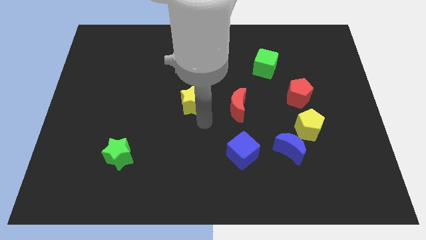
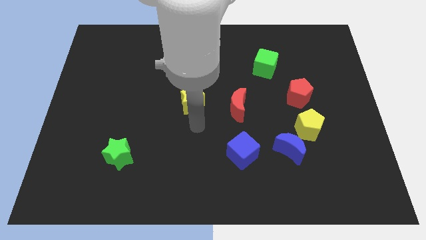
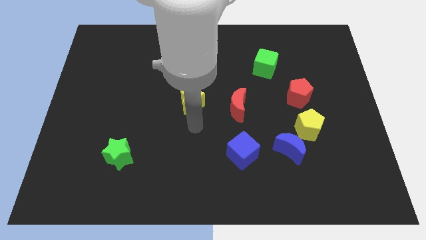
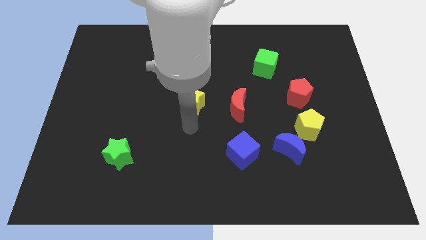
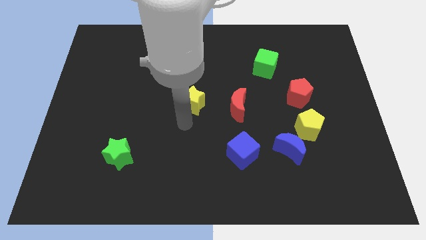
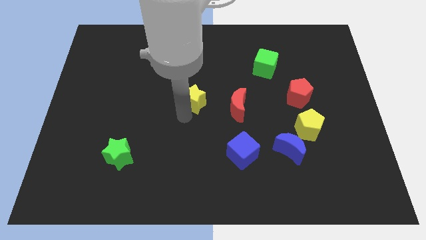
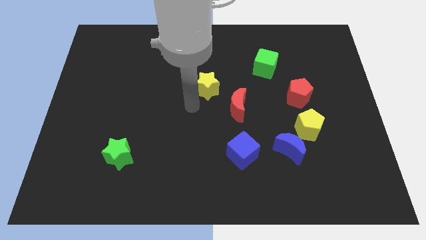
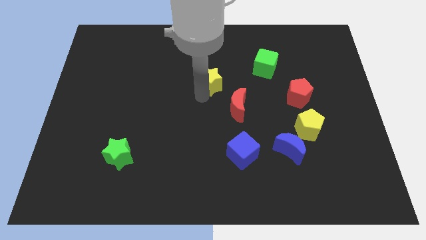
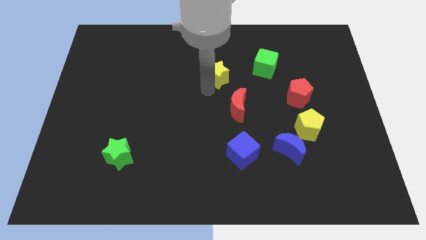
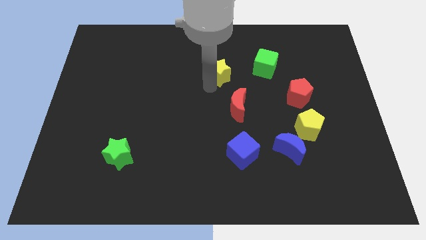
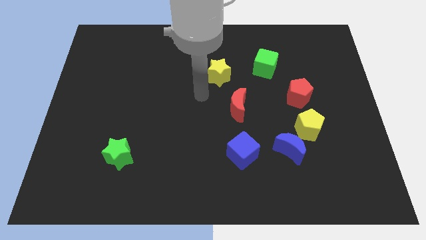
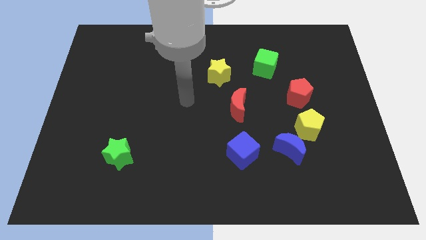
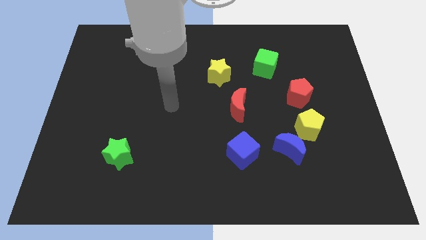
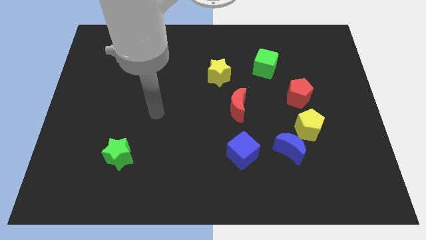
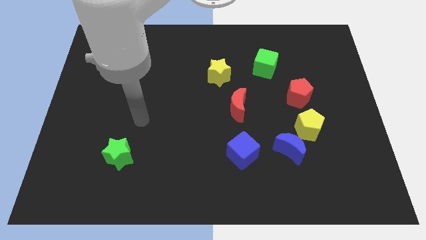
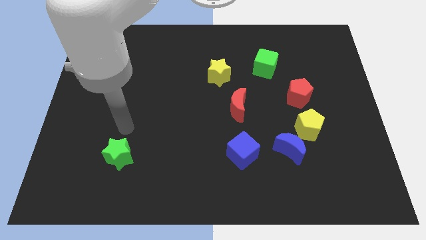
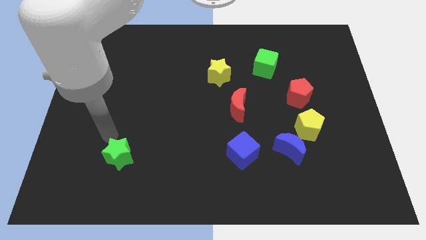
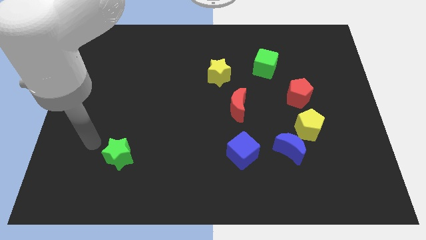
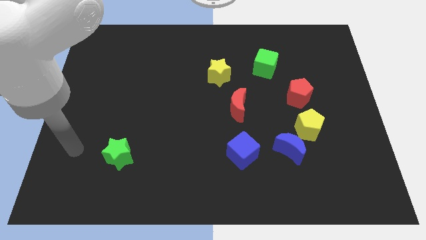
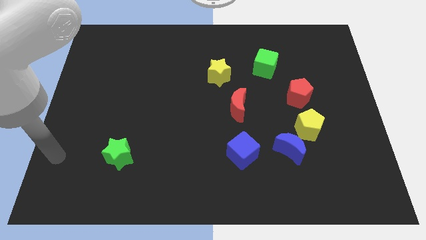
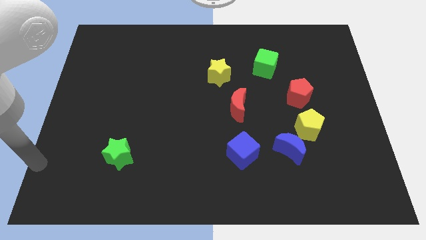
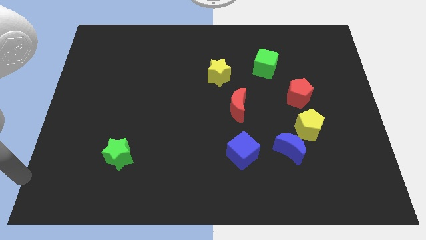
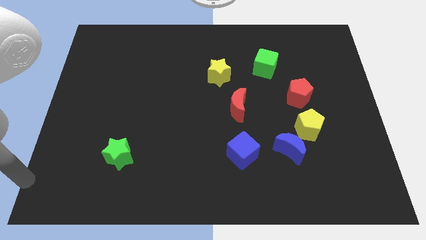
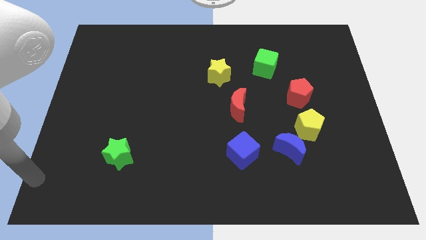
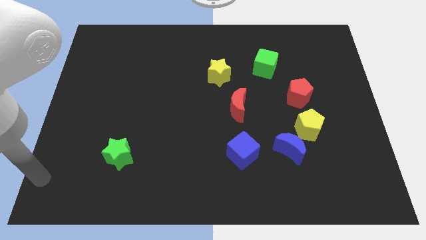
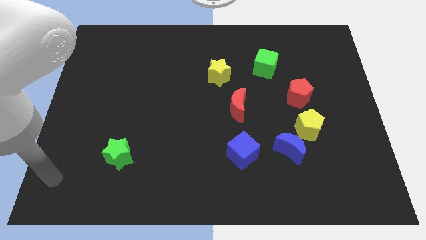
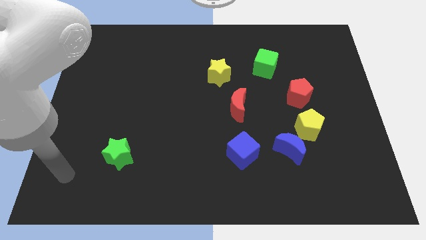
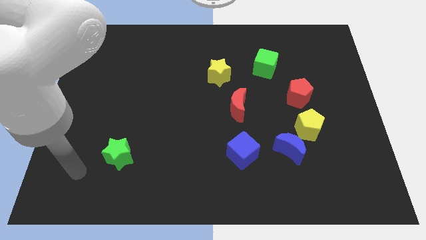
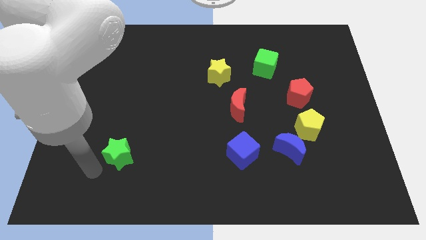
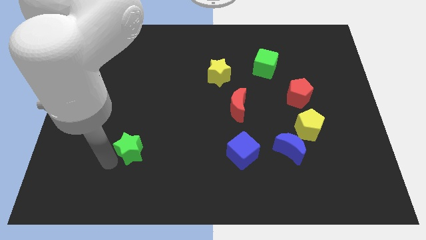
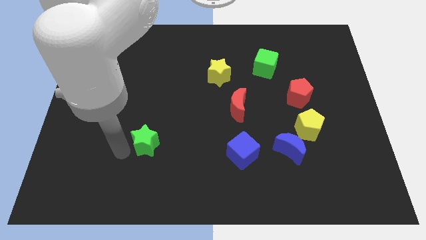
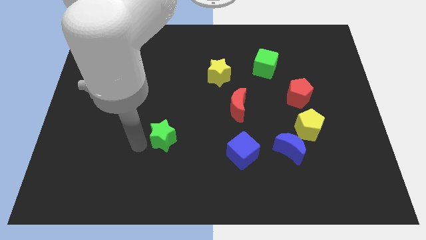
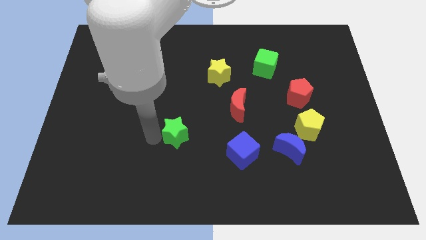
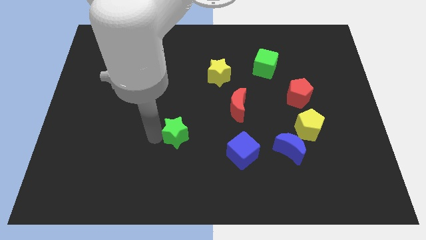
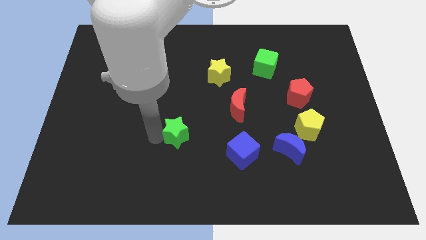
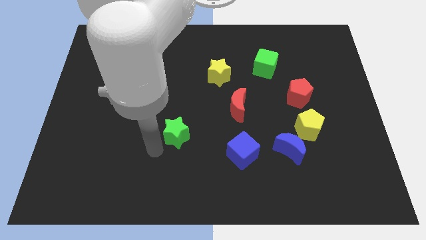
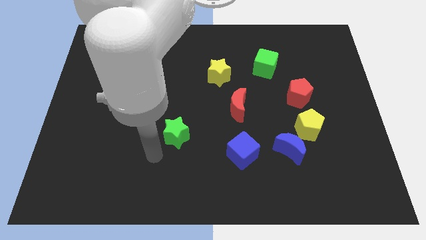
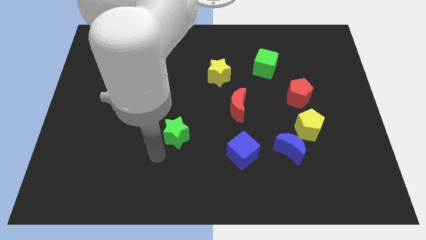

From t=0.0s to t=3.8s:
move the yellow star parallel to the red crescent

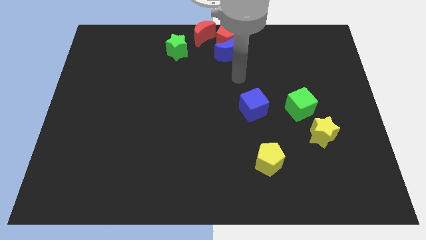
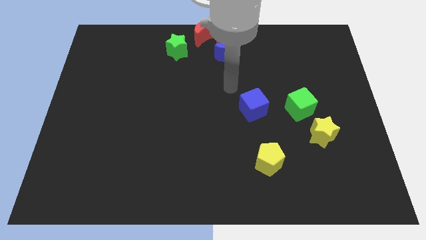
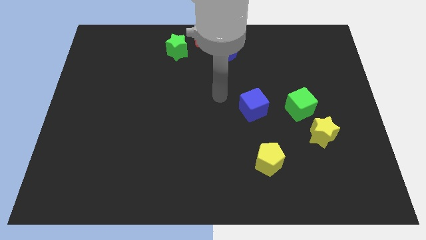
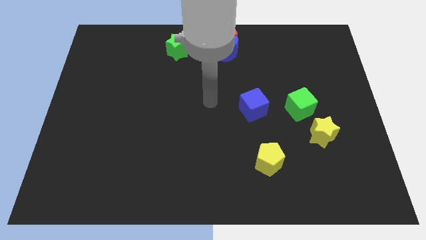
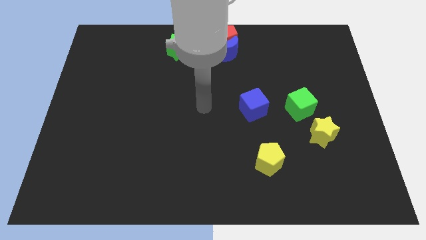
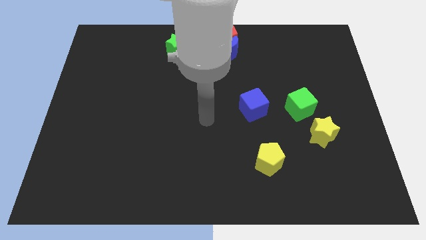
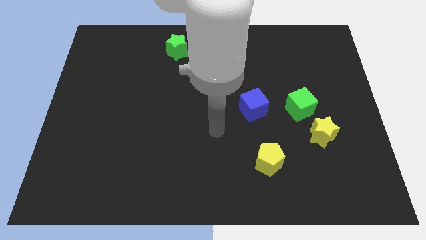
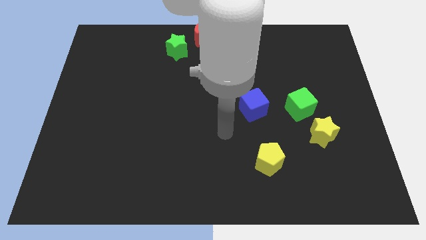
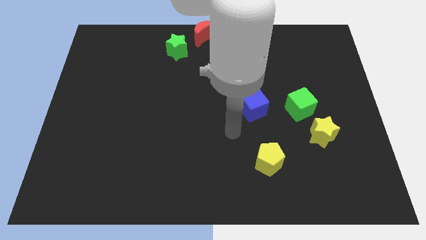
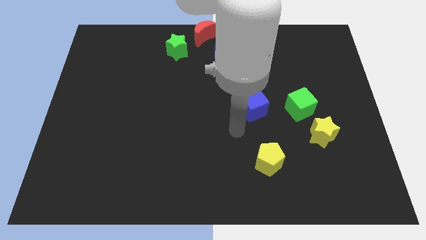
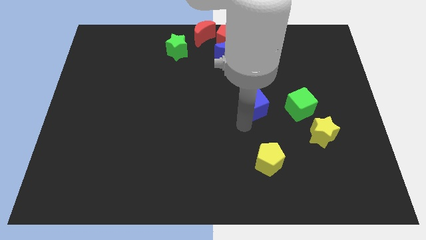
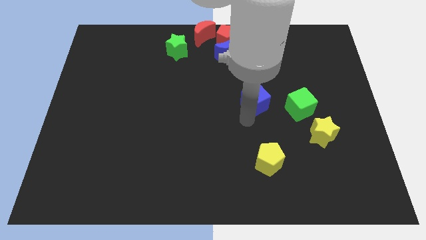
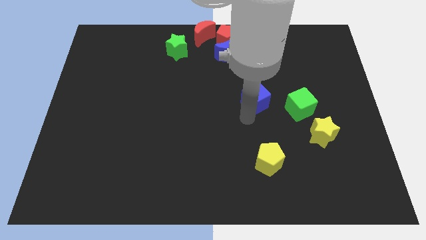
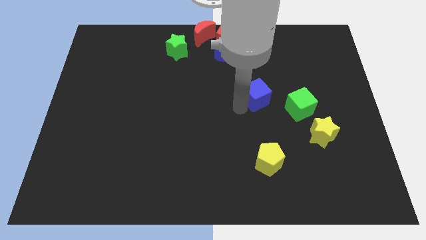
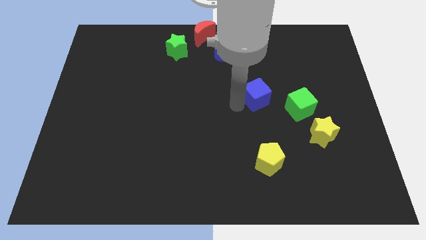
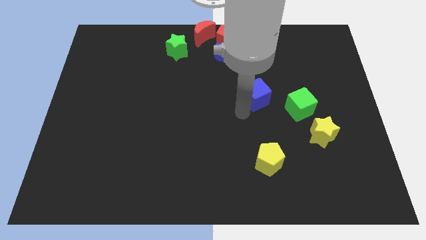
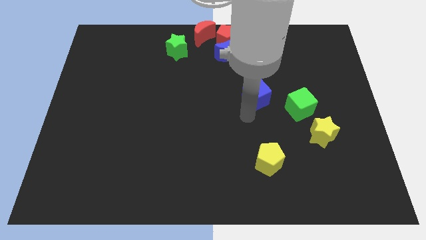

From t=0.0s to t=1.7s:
move blue cube towards top

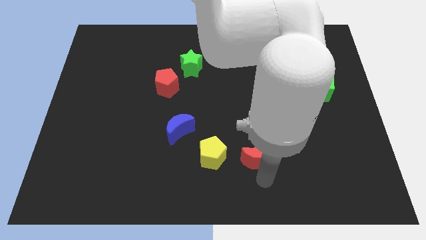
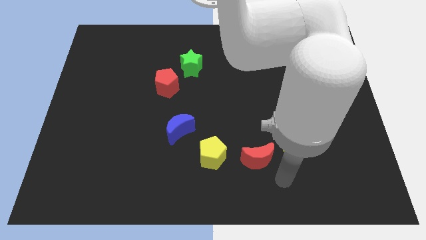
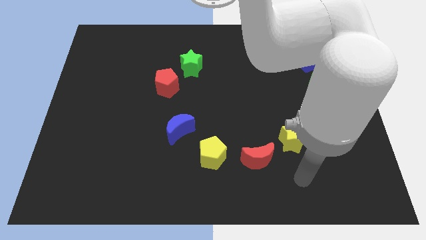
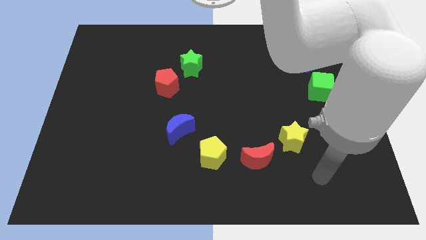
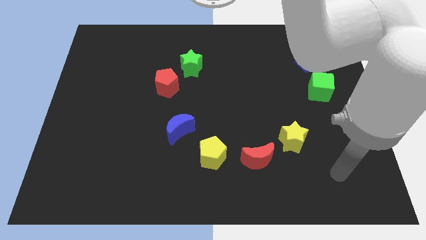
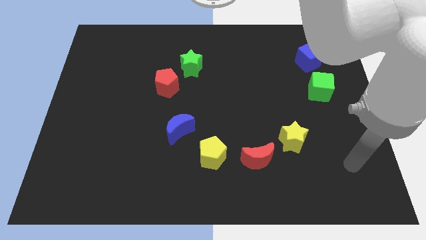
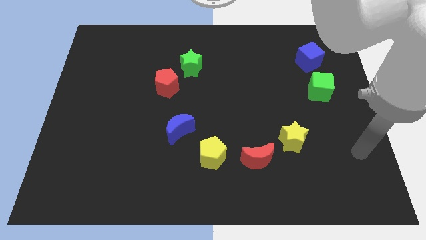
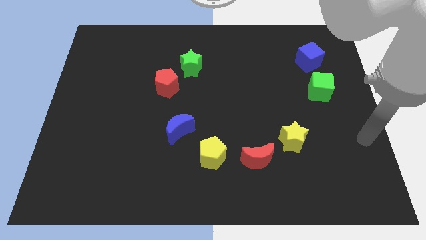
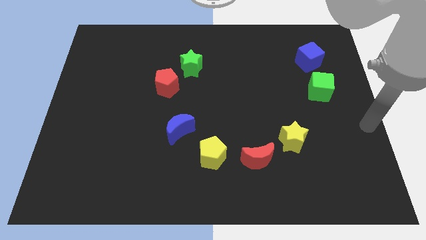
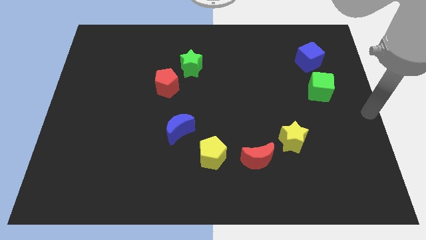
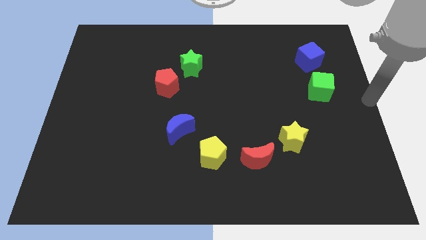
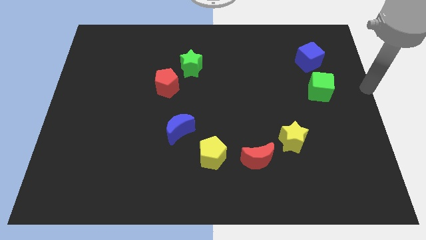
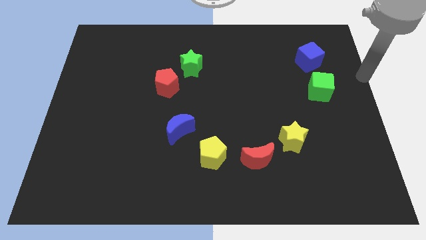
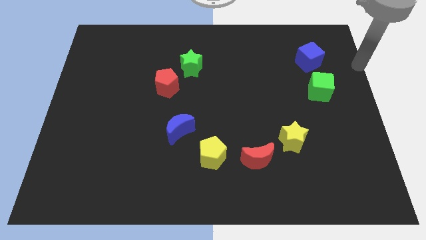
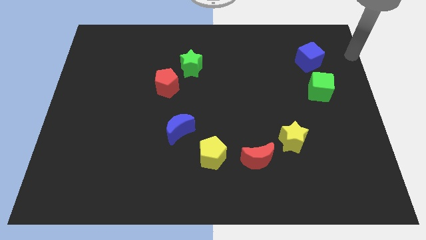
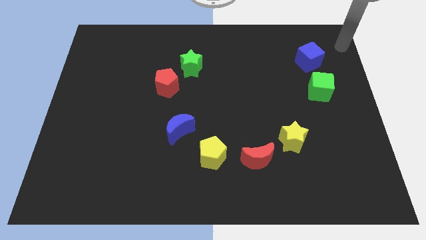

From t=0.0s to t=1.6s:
move your hand to the top right side of the board

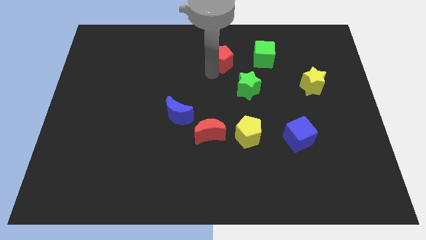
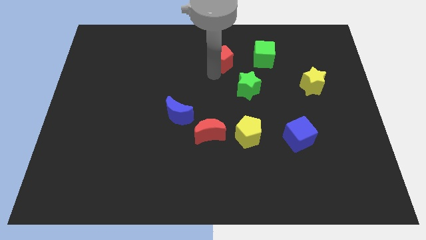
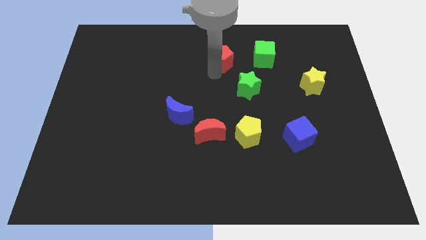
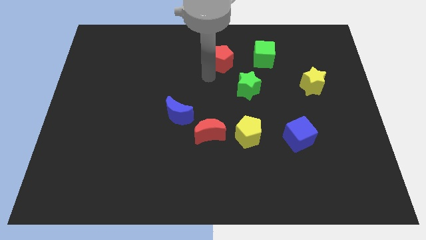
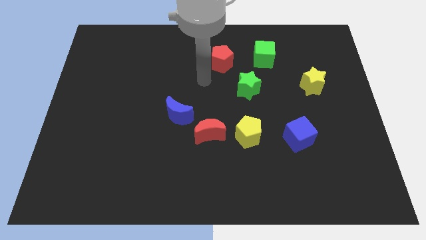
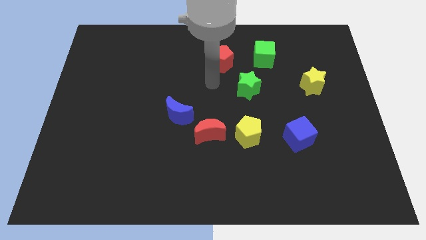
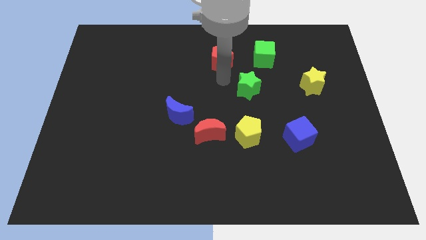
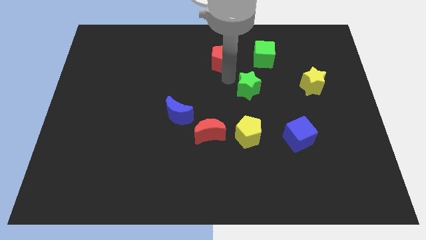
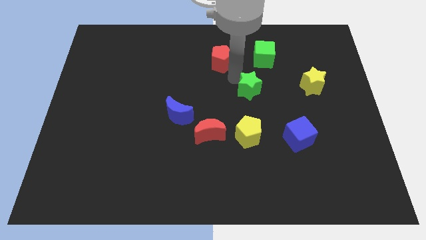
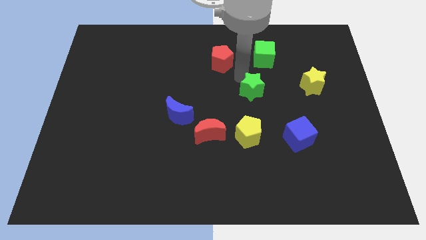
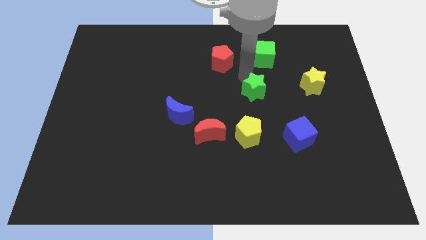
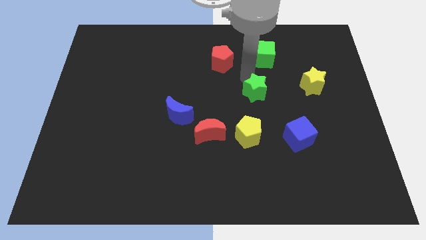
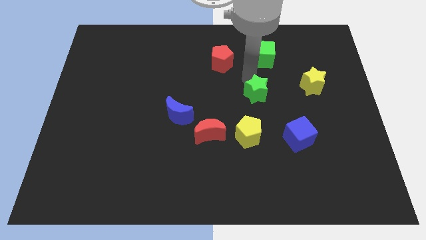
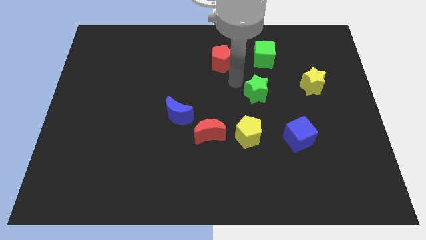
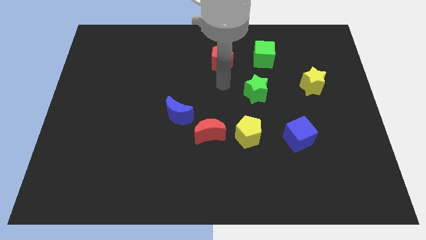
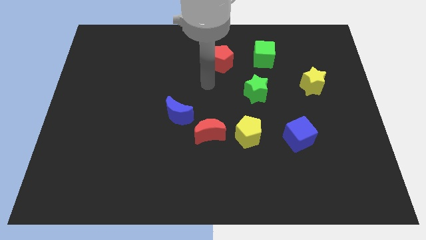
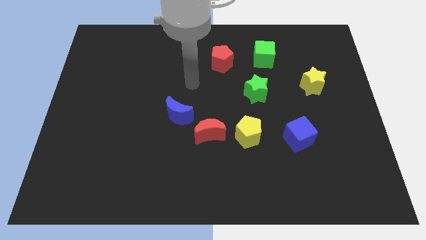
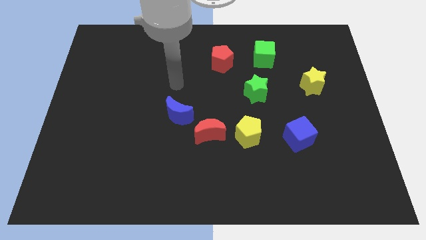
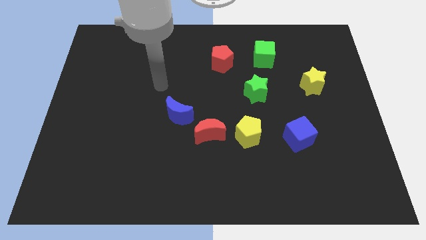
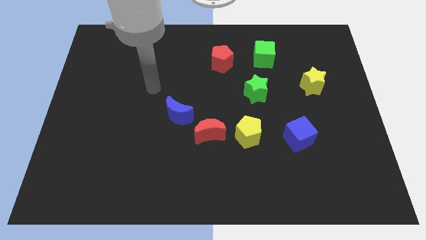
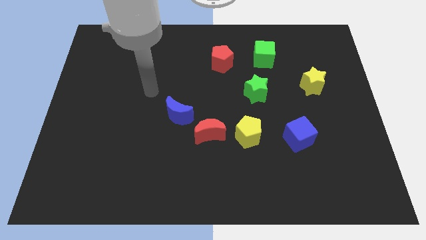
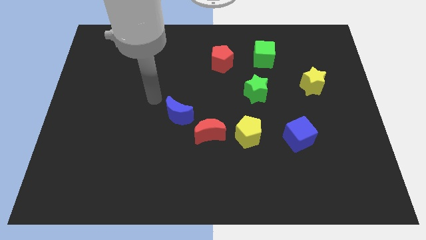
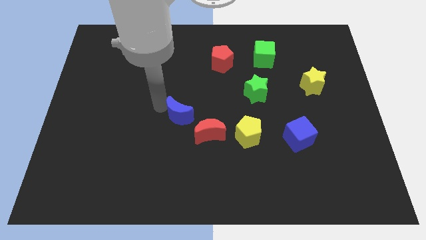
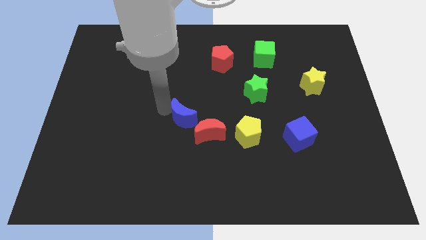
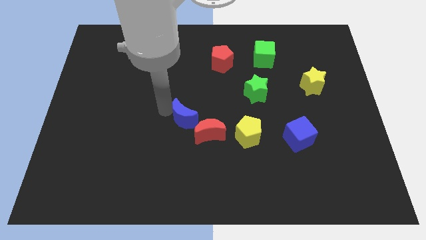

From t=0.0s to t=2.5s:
tap the green star and blue crescent
